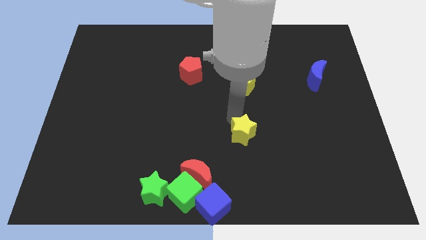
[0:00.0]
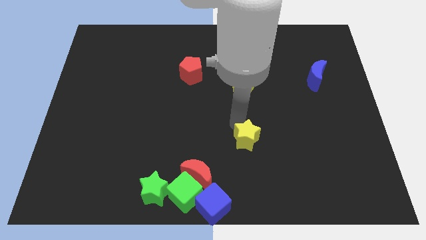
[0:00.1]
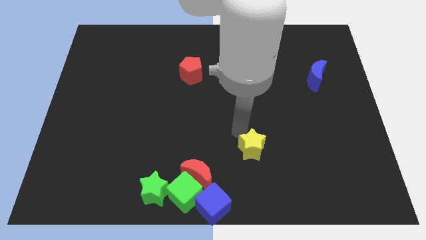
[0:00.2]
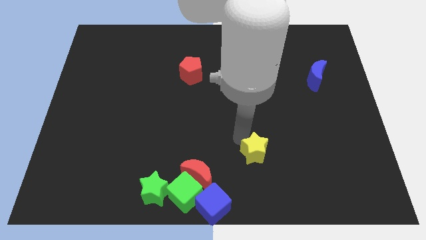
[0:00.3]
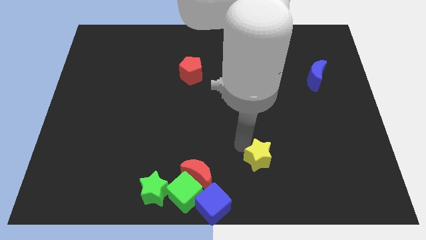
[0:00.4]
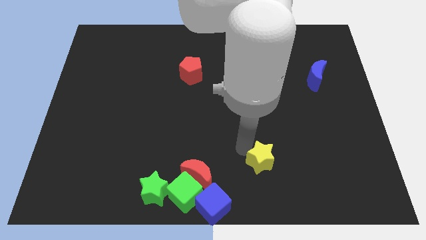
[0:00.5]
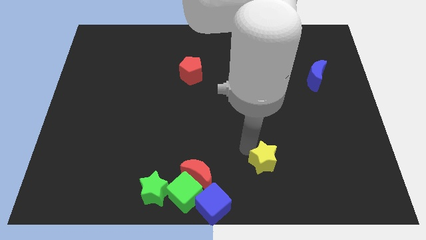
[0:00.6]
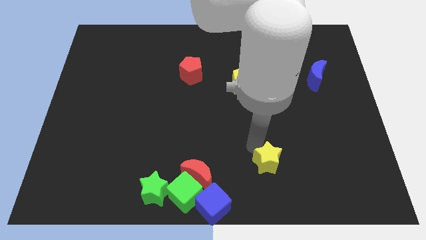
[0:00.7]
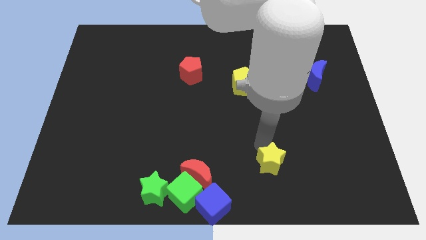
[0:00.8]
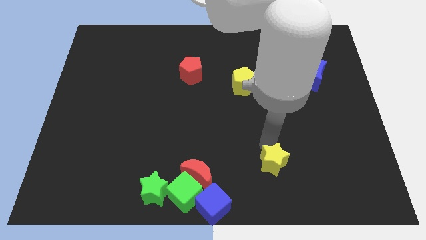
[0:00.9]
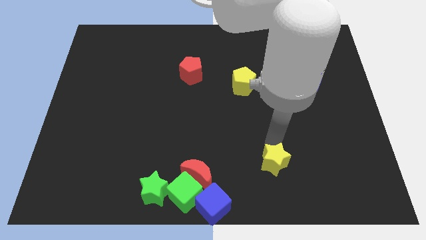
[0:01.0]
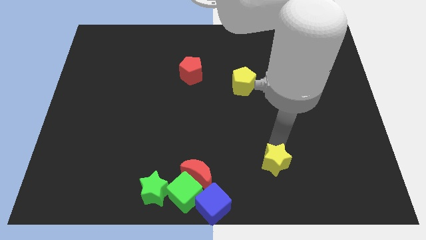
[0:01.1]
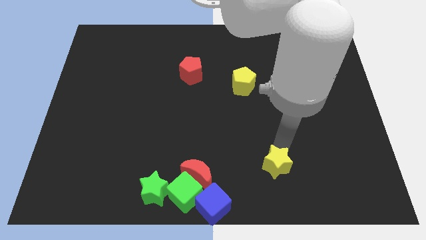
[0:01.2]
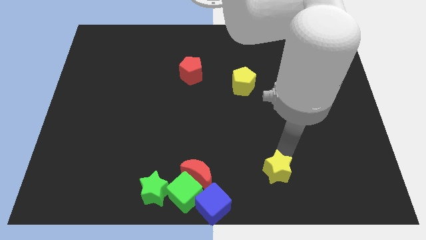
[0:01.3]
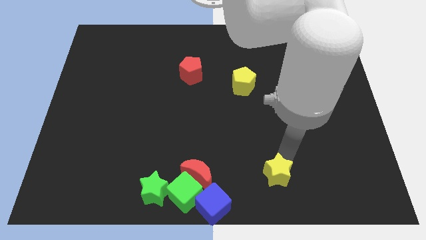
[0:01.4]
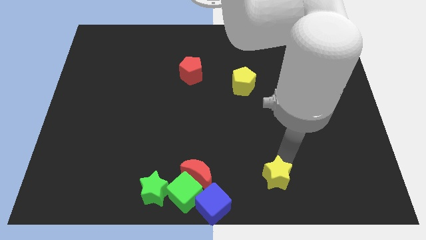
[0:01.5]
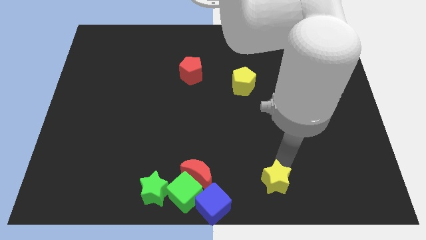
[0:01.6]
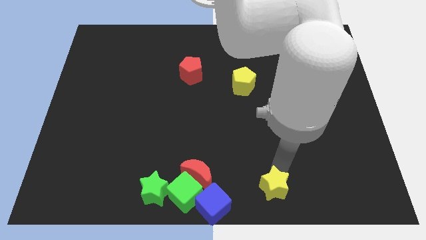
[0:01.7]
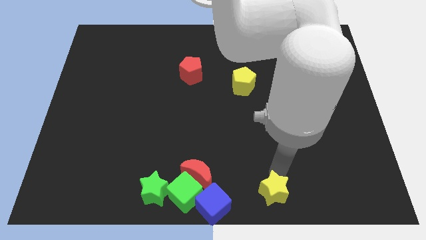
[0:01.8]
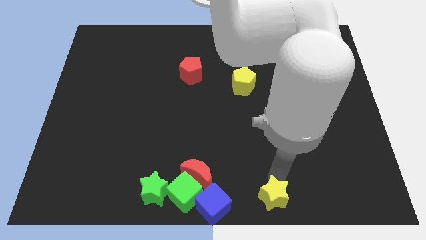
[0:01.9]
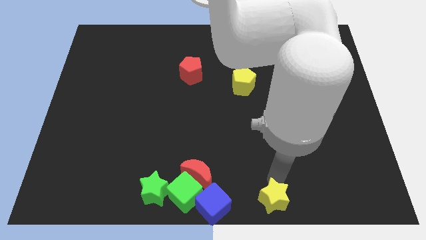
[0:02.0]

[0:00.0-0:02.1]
move the yellow star at the bottom center of the board

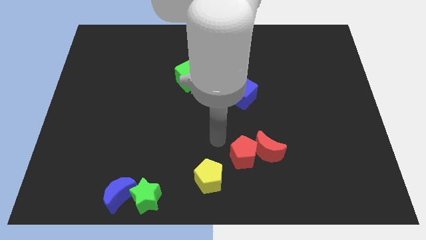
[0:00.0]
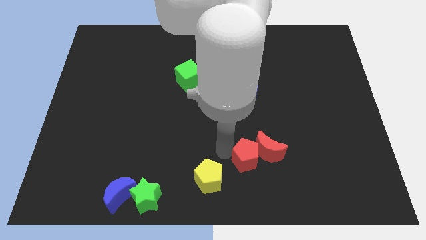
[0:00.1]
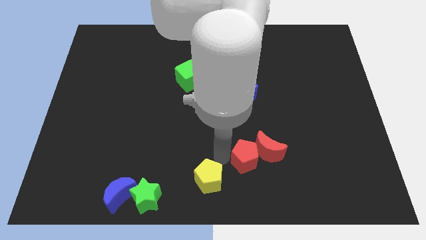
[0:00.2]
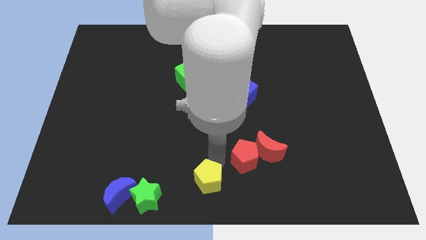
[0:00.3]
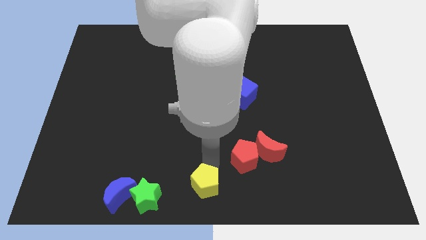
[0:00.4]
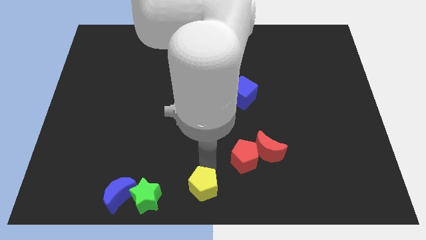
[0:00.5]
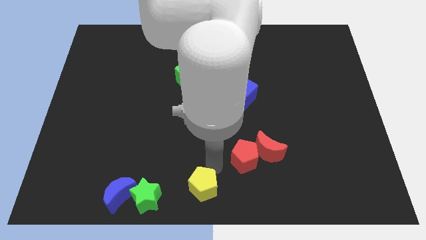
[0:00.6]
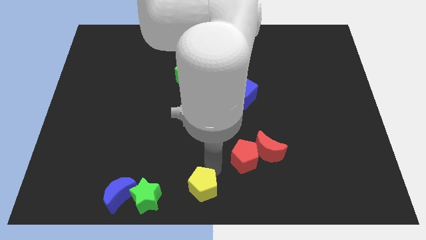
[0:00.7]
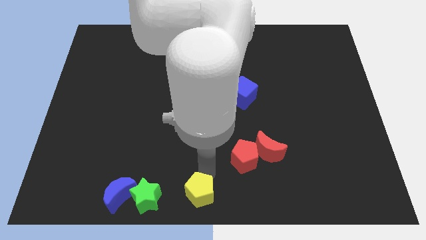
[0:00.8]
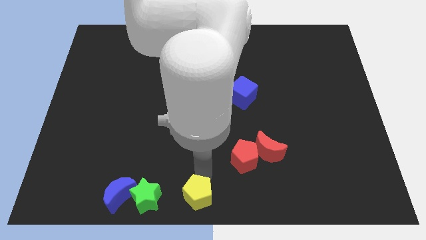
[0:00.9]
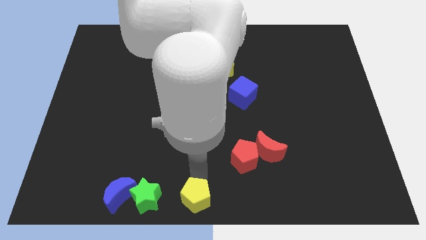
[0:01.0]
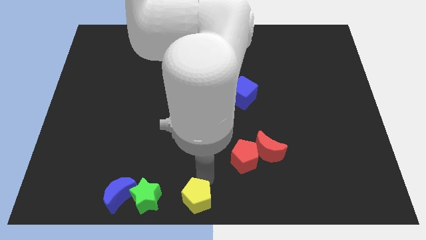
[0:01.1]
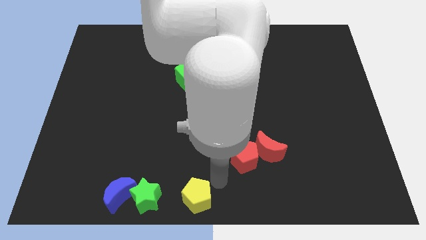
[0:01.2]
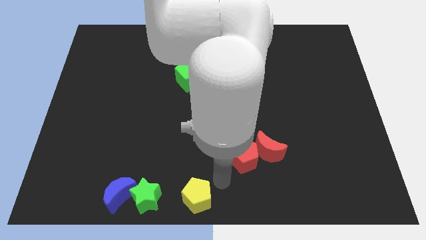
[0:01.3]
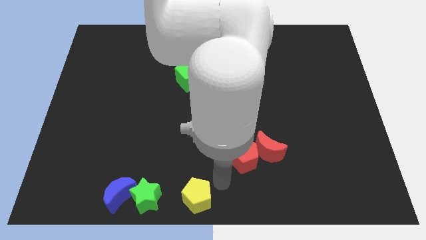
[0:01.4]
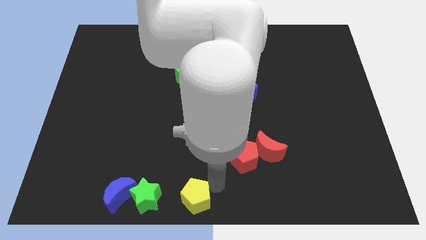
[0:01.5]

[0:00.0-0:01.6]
move the yellow pentagon to the right of the green star

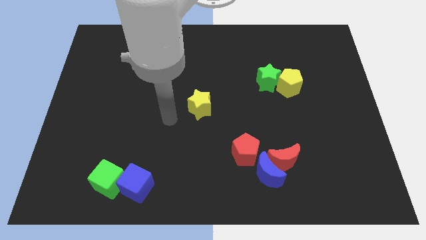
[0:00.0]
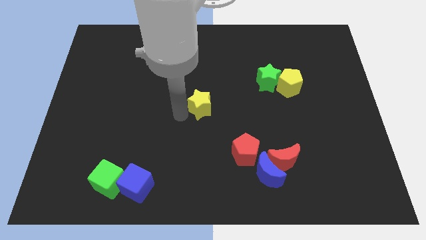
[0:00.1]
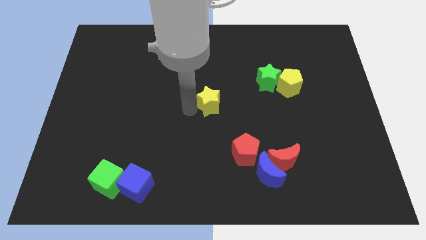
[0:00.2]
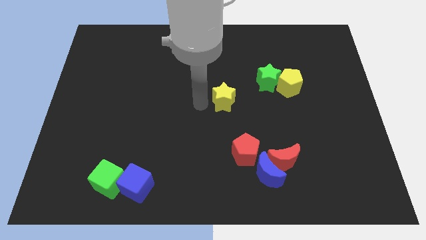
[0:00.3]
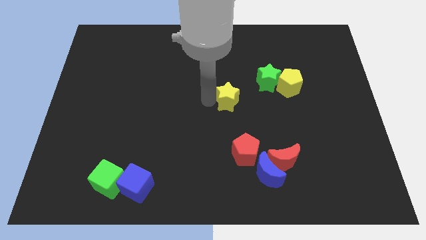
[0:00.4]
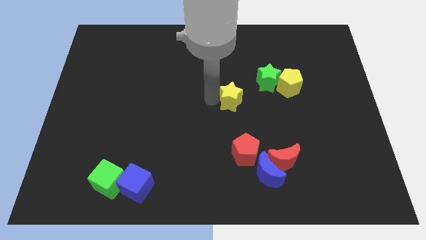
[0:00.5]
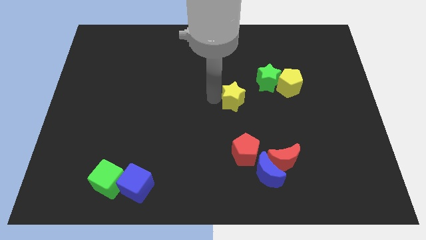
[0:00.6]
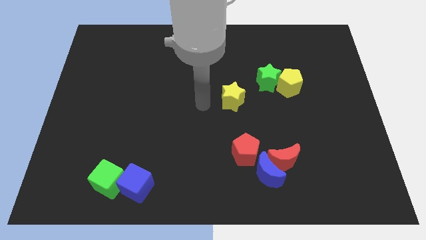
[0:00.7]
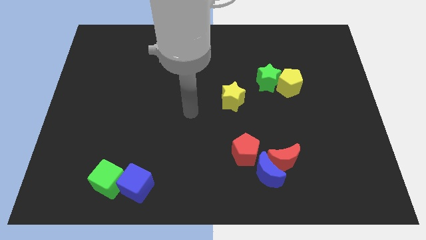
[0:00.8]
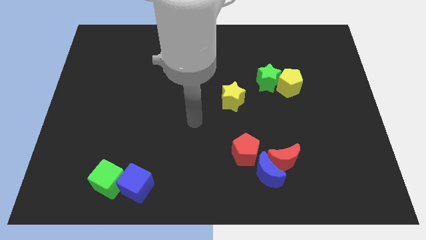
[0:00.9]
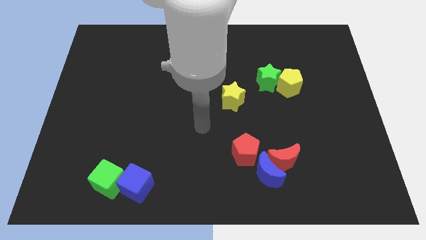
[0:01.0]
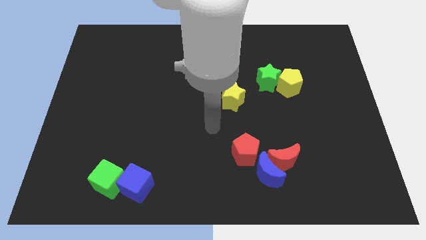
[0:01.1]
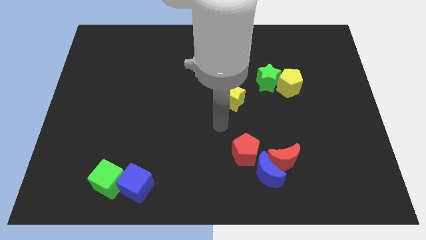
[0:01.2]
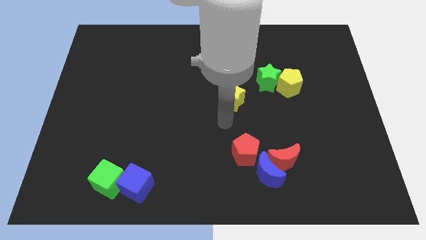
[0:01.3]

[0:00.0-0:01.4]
move the yellow star towards the green star

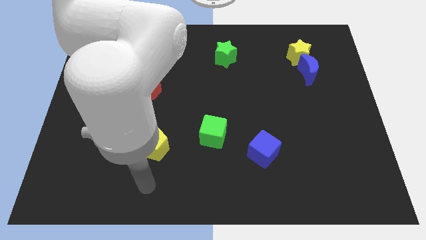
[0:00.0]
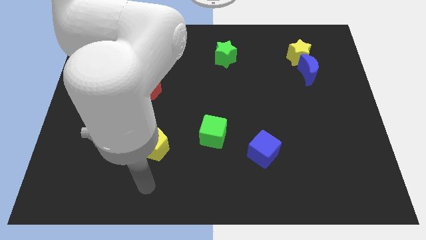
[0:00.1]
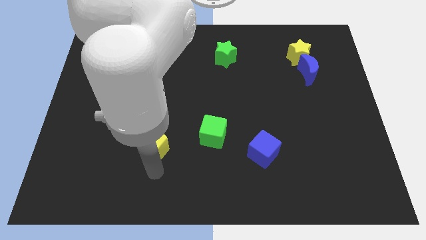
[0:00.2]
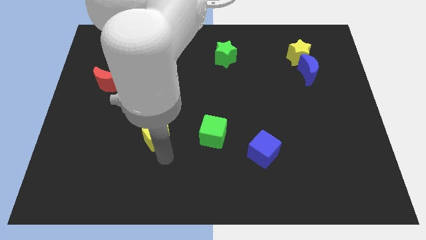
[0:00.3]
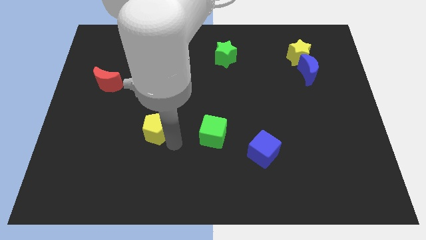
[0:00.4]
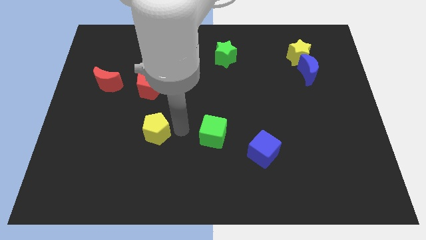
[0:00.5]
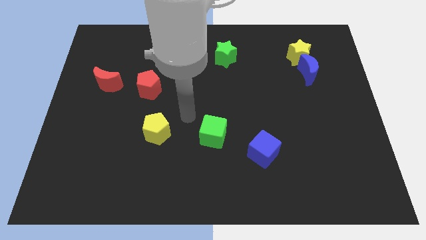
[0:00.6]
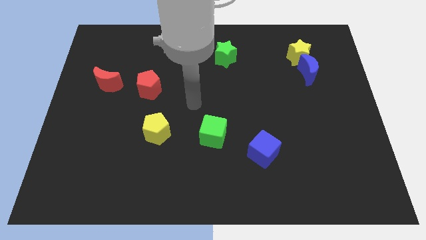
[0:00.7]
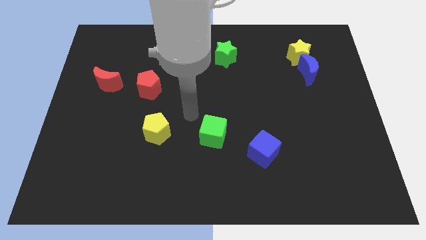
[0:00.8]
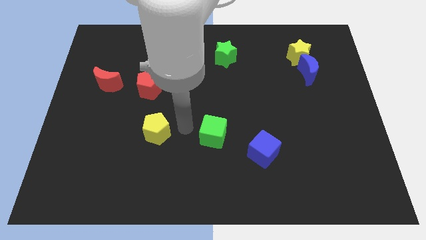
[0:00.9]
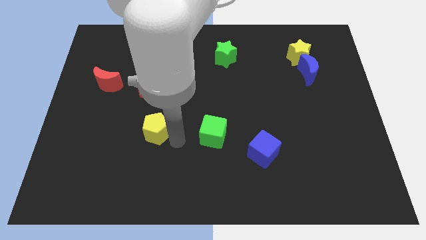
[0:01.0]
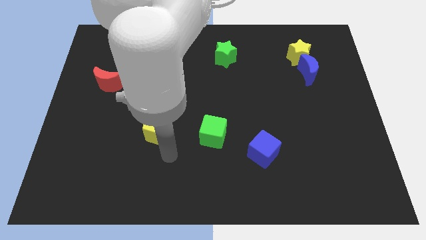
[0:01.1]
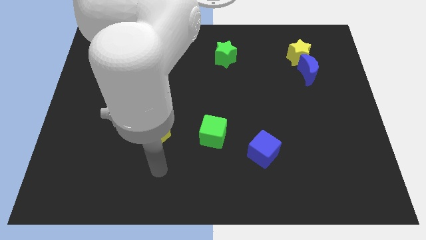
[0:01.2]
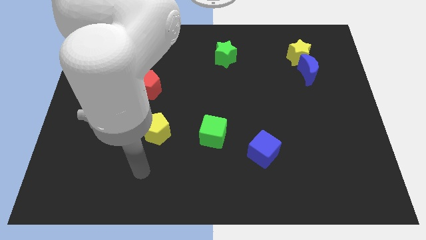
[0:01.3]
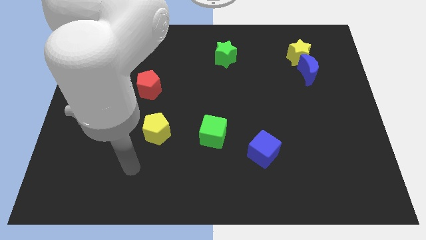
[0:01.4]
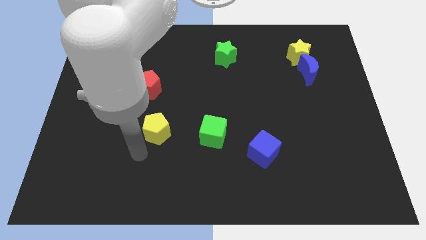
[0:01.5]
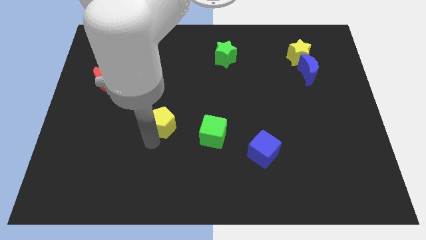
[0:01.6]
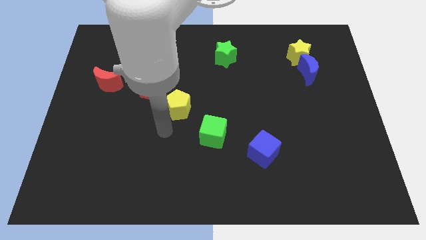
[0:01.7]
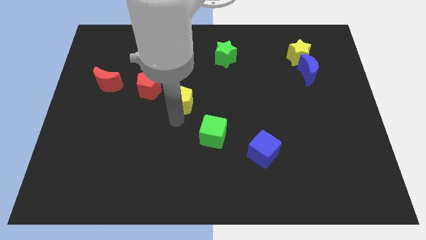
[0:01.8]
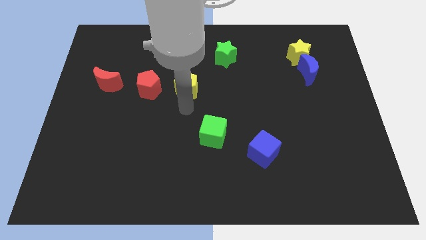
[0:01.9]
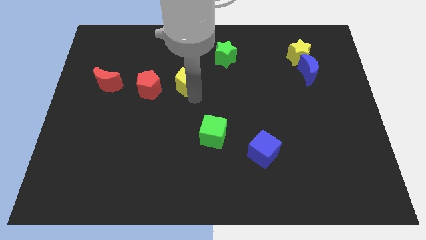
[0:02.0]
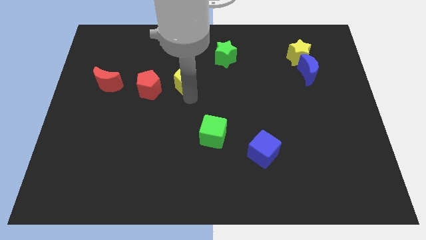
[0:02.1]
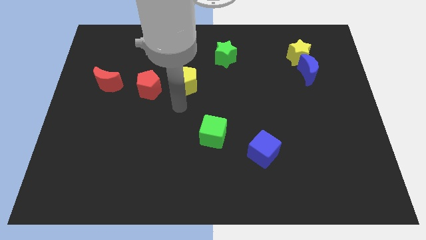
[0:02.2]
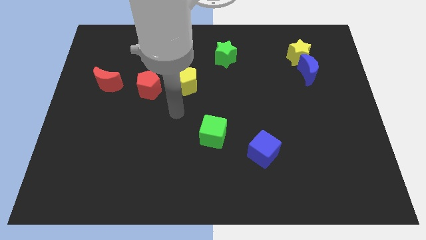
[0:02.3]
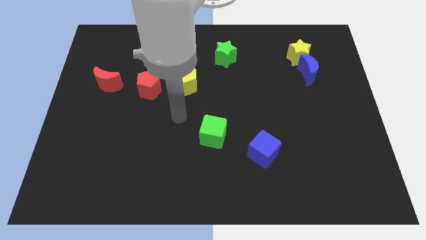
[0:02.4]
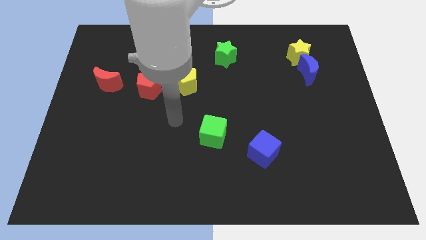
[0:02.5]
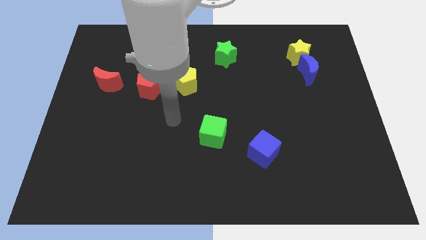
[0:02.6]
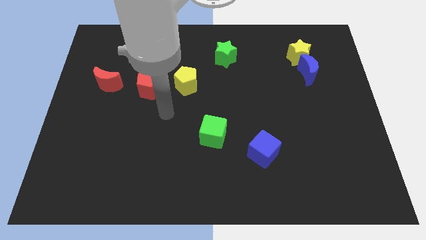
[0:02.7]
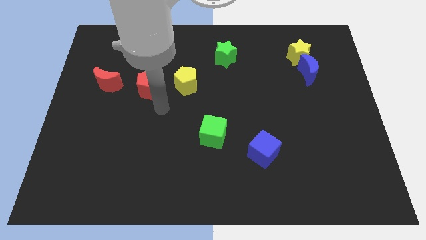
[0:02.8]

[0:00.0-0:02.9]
move the yellow pentagon right to the of red pentagon

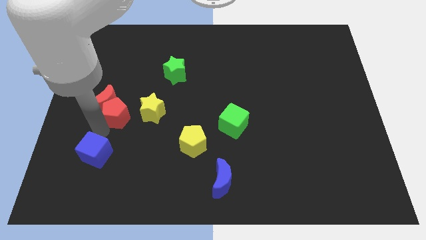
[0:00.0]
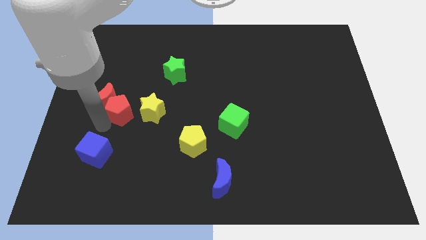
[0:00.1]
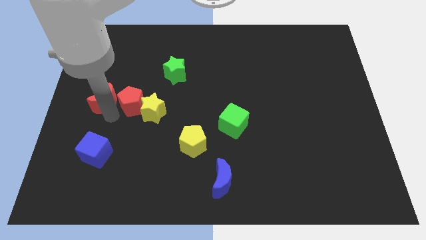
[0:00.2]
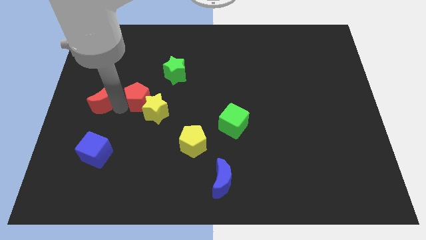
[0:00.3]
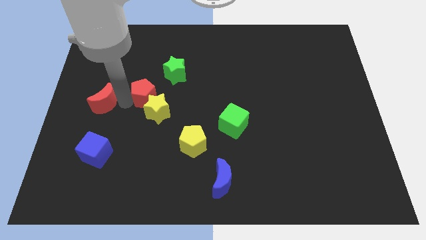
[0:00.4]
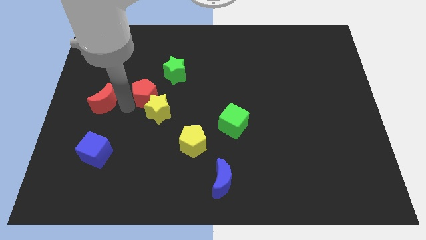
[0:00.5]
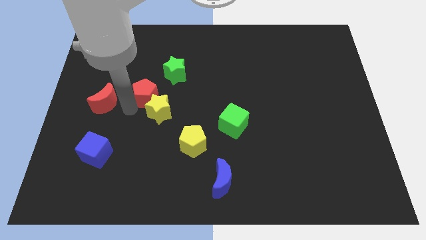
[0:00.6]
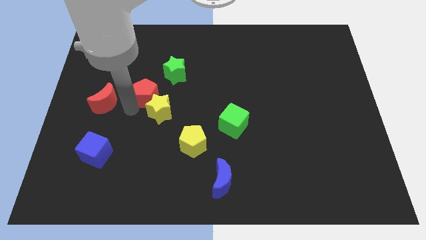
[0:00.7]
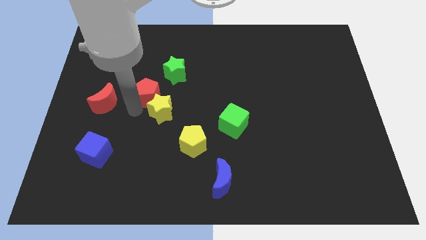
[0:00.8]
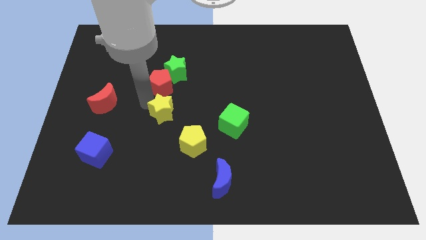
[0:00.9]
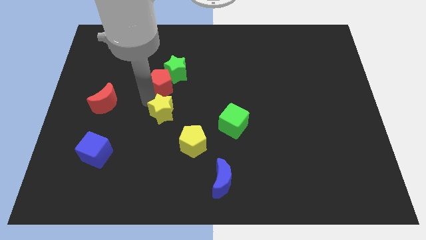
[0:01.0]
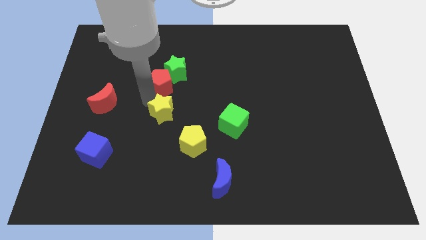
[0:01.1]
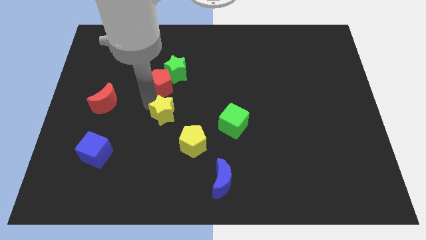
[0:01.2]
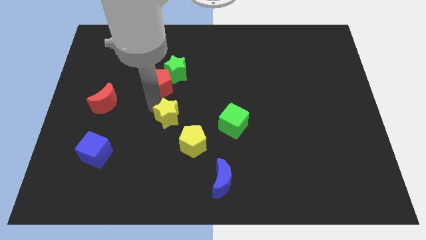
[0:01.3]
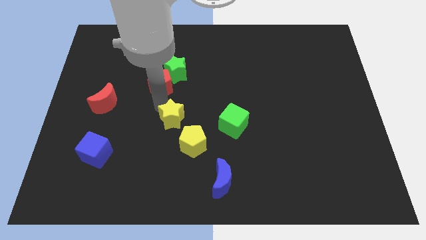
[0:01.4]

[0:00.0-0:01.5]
move red pentagon towards the green star
